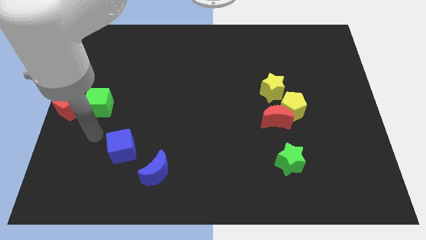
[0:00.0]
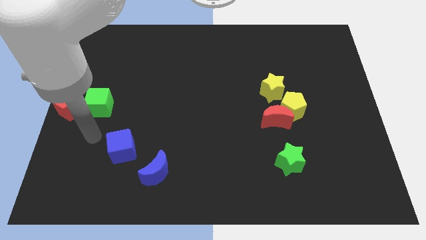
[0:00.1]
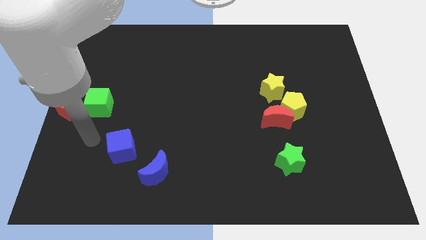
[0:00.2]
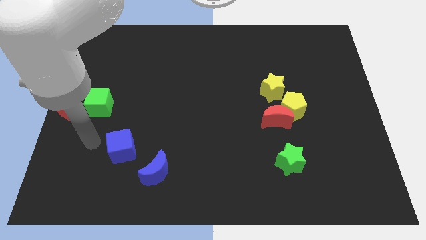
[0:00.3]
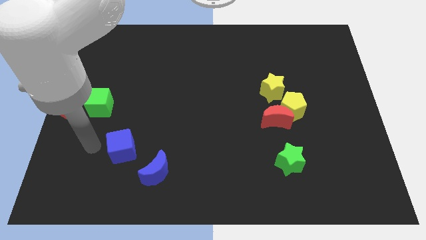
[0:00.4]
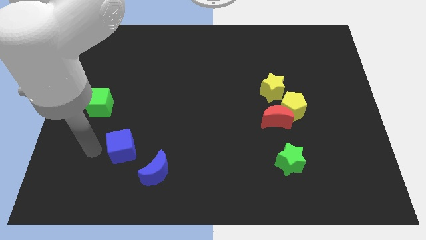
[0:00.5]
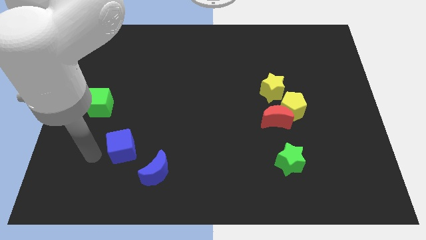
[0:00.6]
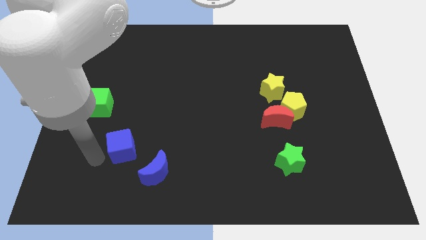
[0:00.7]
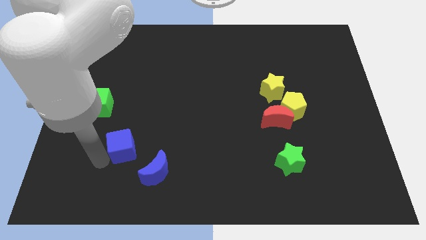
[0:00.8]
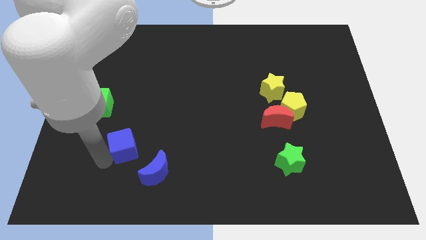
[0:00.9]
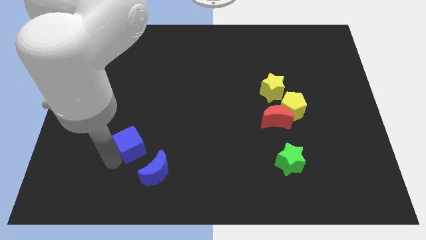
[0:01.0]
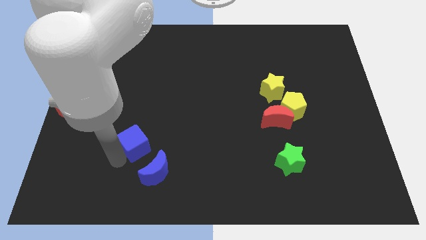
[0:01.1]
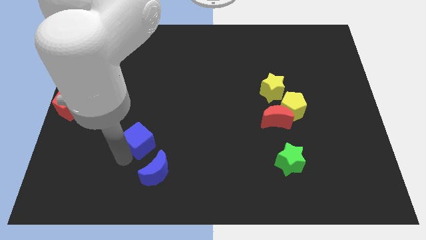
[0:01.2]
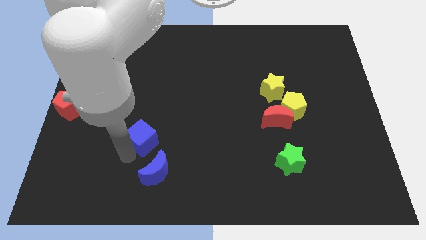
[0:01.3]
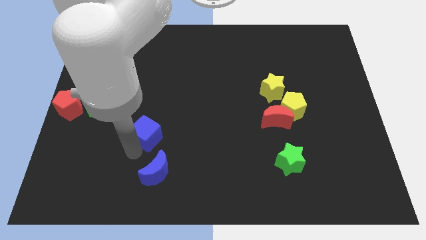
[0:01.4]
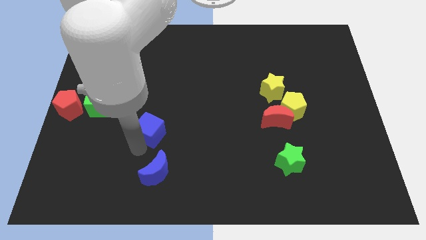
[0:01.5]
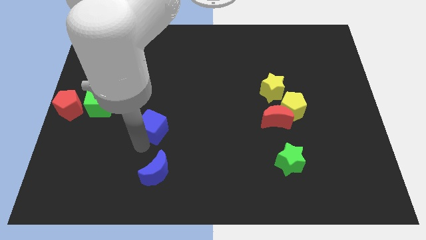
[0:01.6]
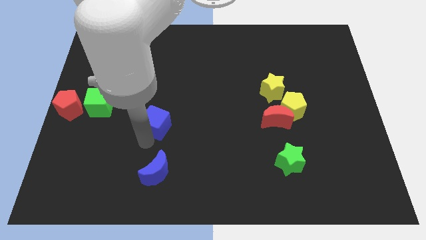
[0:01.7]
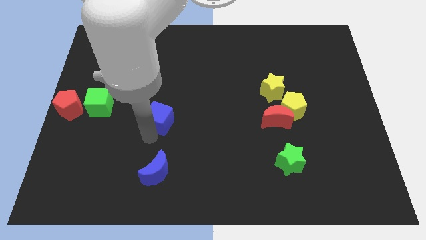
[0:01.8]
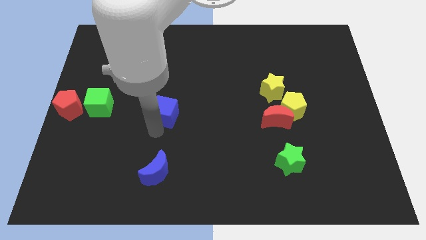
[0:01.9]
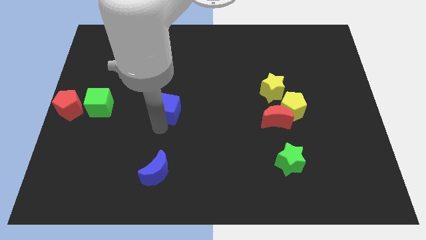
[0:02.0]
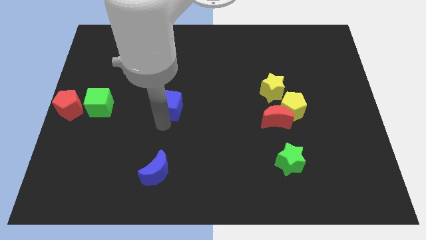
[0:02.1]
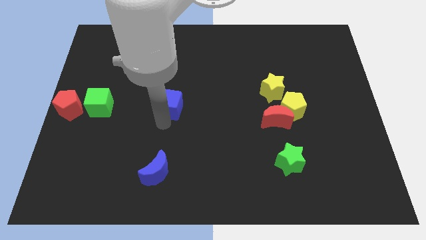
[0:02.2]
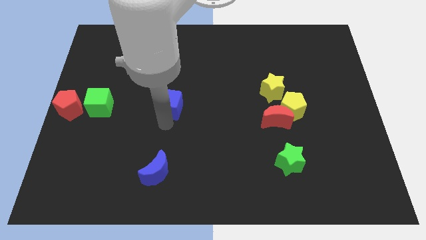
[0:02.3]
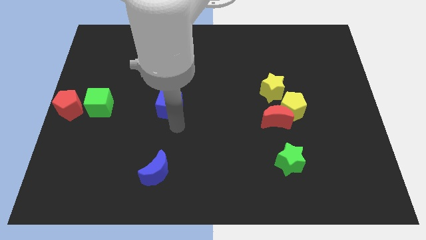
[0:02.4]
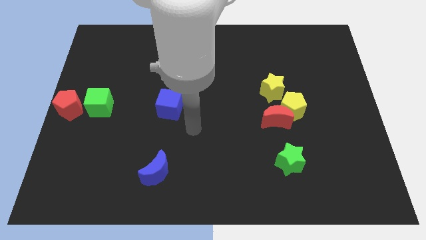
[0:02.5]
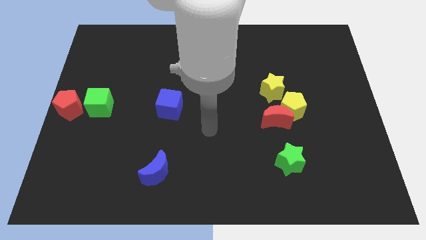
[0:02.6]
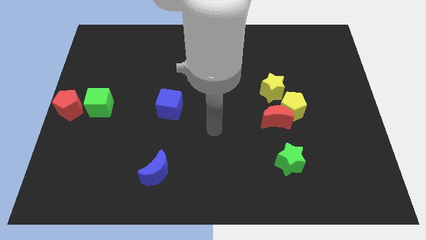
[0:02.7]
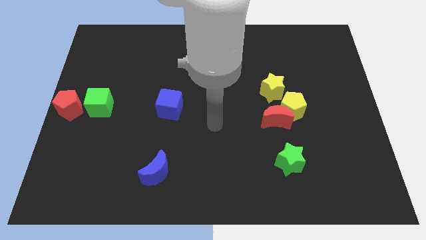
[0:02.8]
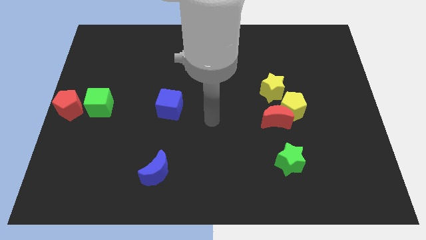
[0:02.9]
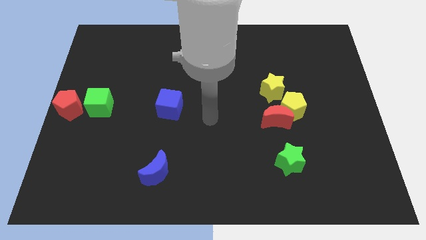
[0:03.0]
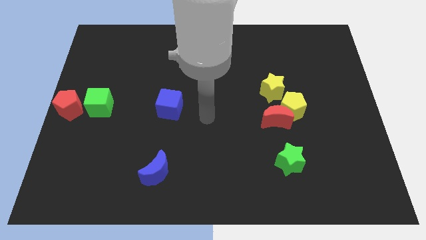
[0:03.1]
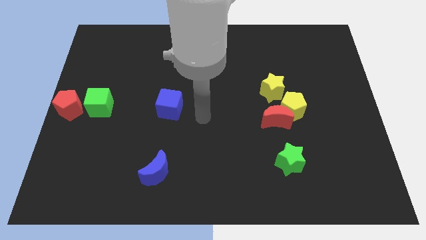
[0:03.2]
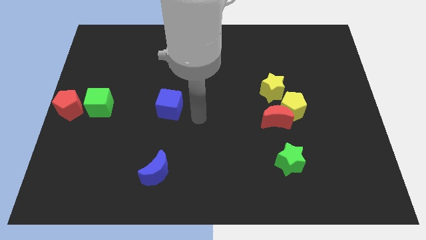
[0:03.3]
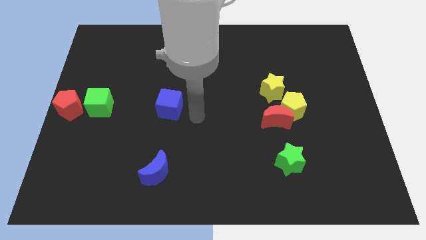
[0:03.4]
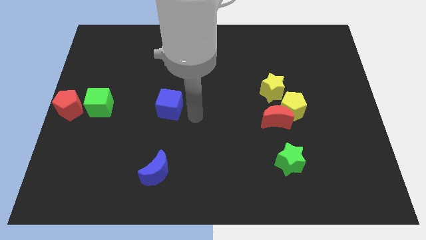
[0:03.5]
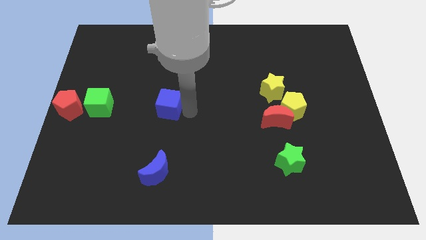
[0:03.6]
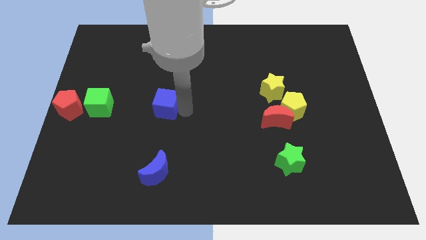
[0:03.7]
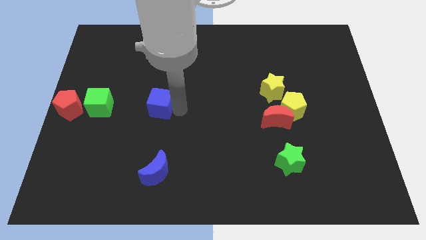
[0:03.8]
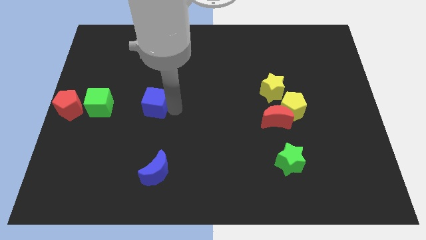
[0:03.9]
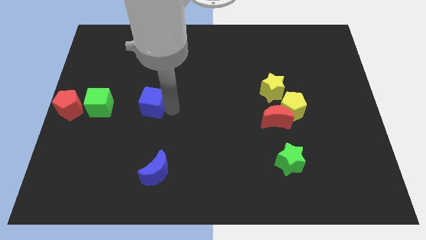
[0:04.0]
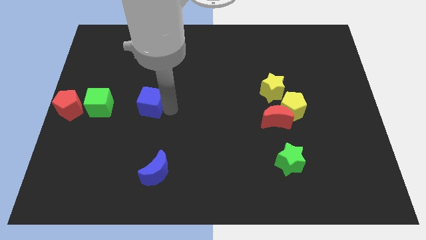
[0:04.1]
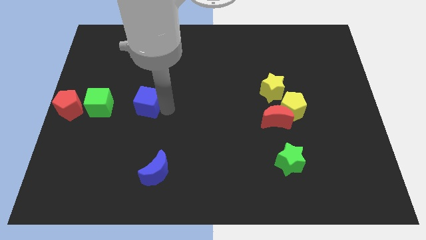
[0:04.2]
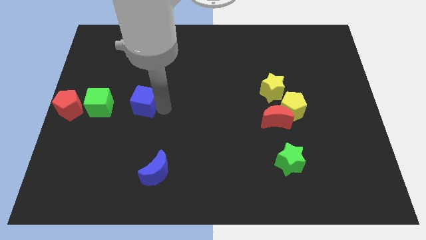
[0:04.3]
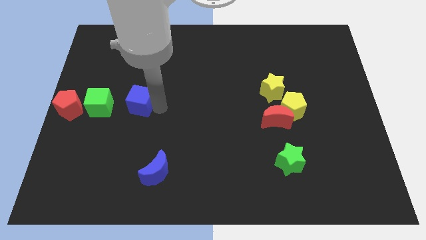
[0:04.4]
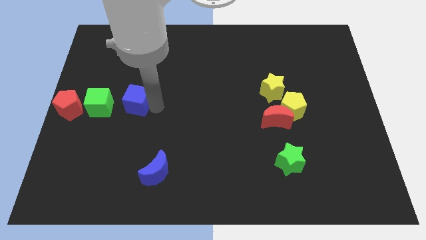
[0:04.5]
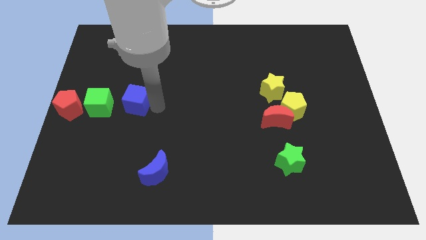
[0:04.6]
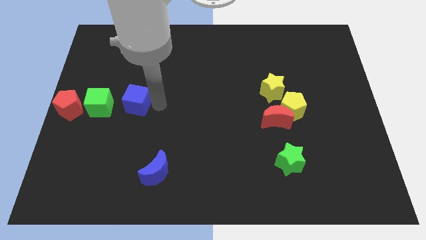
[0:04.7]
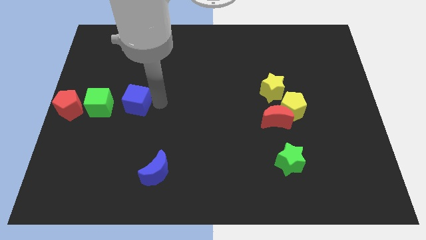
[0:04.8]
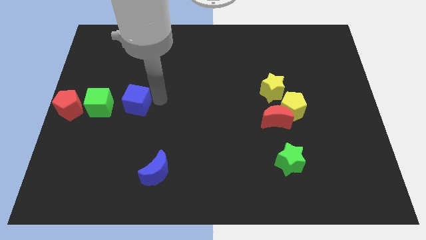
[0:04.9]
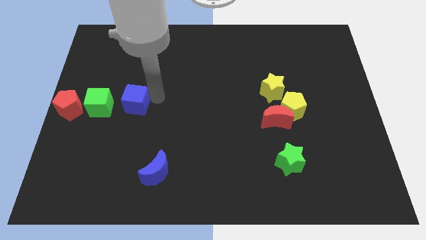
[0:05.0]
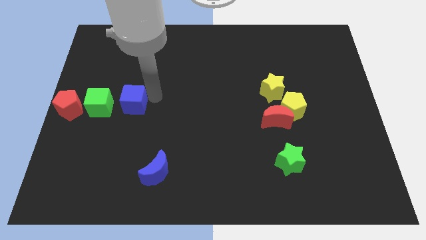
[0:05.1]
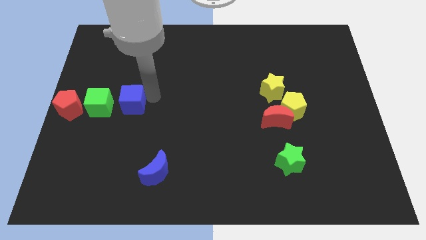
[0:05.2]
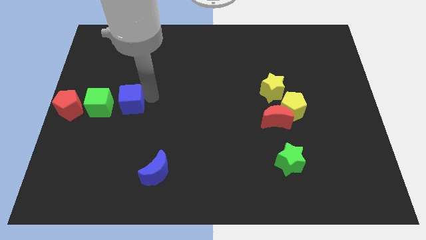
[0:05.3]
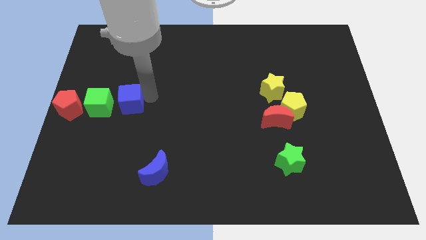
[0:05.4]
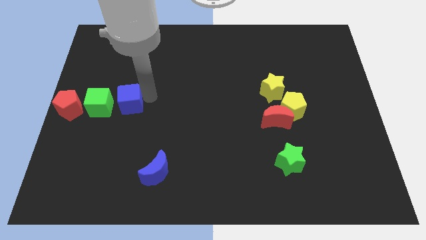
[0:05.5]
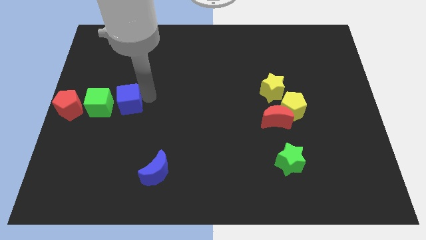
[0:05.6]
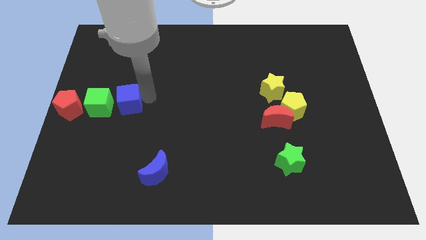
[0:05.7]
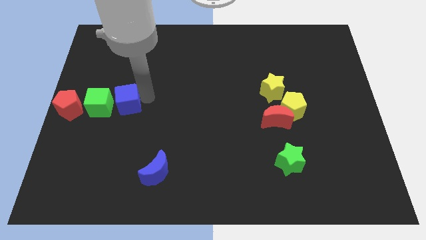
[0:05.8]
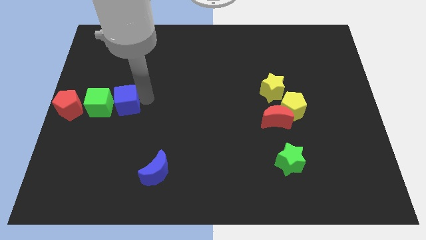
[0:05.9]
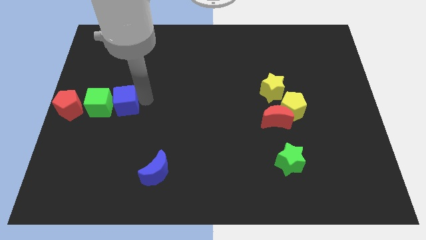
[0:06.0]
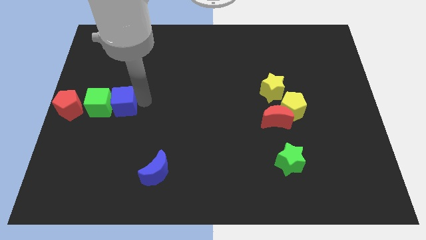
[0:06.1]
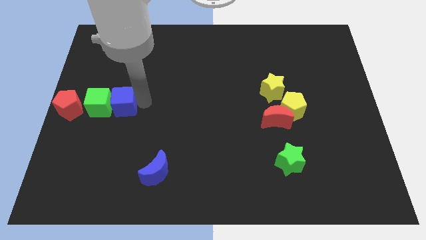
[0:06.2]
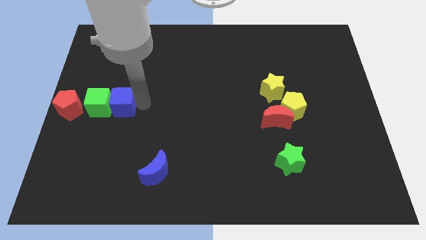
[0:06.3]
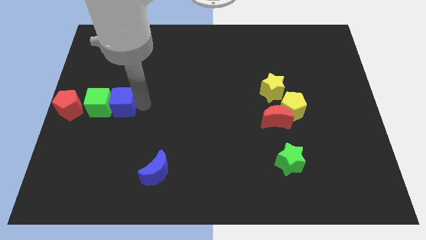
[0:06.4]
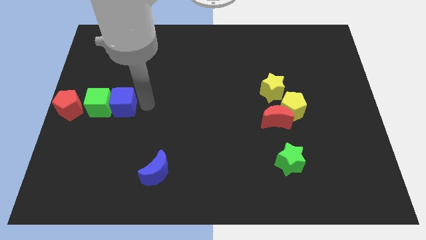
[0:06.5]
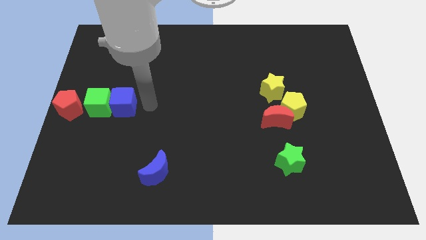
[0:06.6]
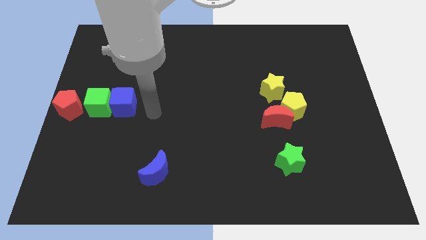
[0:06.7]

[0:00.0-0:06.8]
push the blue cube to the right of the green cube

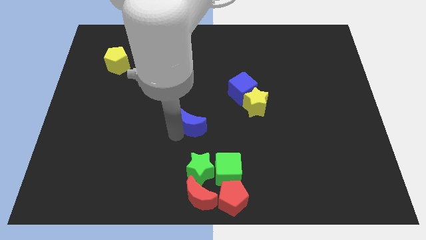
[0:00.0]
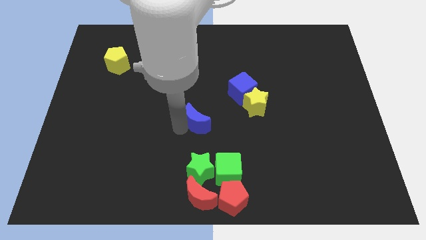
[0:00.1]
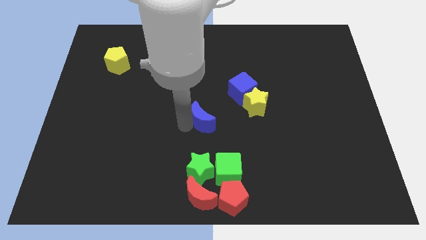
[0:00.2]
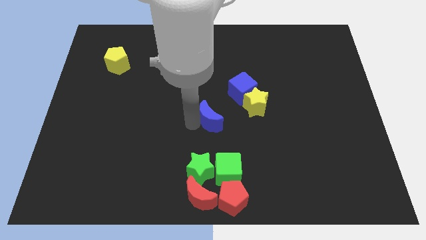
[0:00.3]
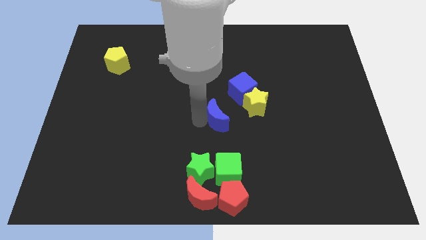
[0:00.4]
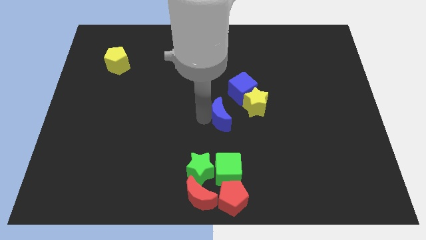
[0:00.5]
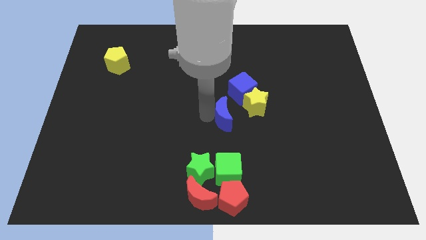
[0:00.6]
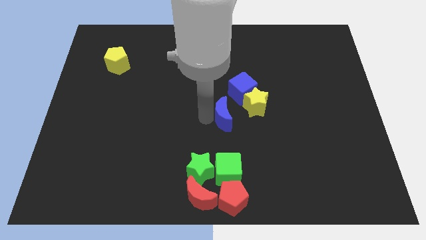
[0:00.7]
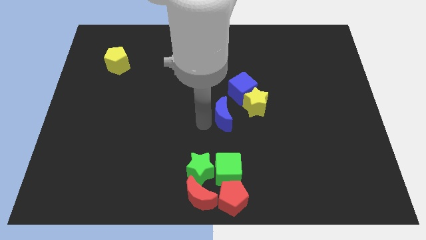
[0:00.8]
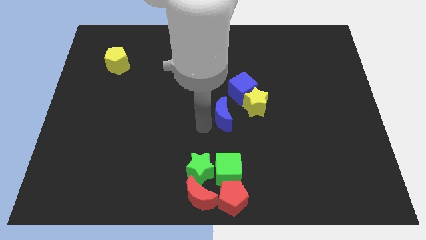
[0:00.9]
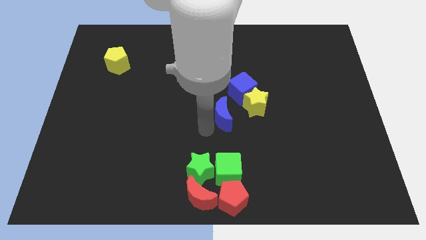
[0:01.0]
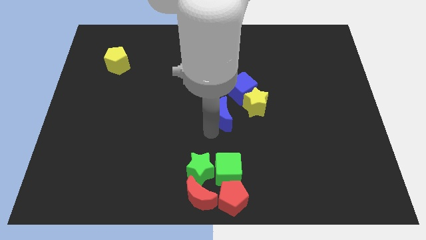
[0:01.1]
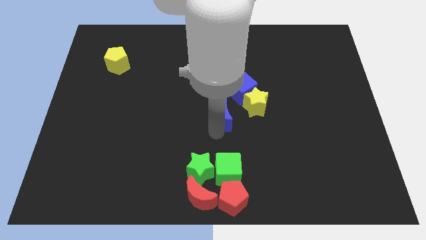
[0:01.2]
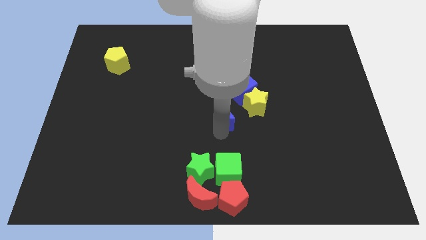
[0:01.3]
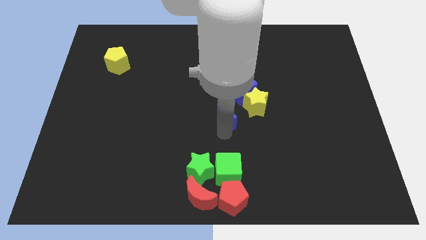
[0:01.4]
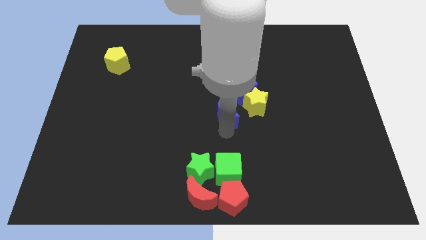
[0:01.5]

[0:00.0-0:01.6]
push the blue crescent to the left of the yellow star

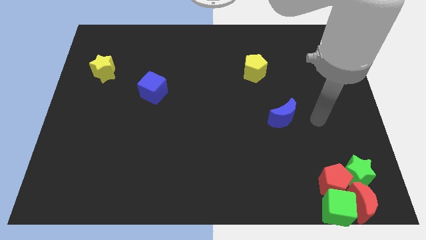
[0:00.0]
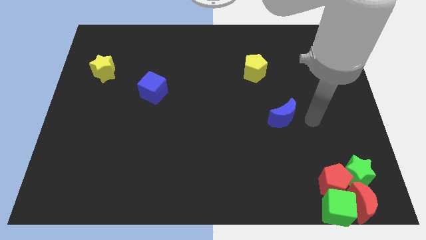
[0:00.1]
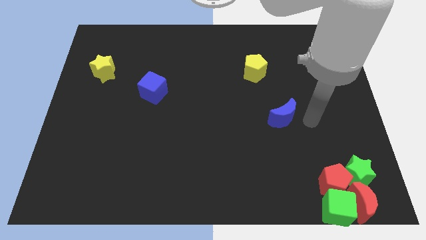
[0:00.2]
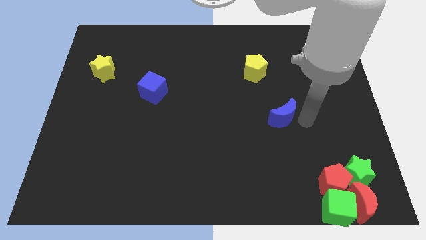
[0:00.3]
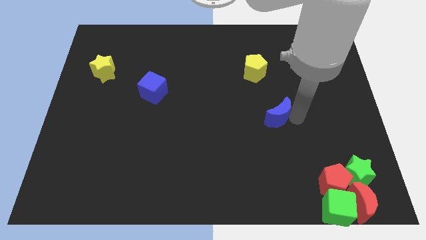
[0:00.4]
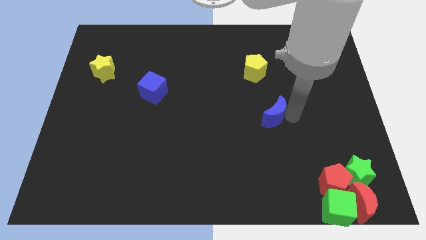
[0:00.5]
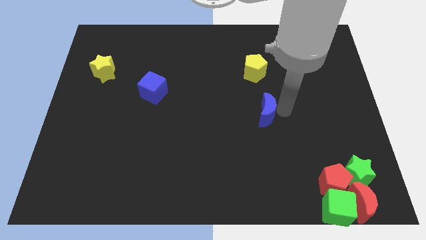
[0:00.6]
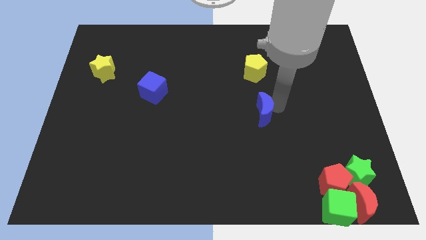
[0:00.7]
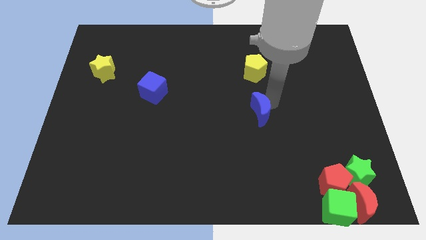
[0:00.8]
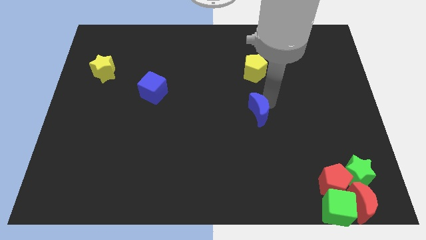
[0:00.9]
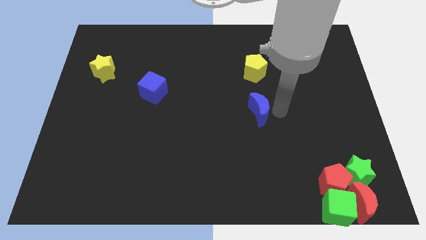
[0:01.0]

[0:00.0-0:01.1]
place the blue moon below the yellow pentagon
